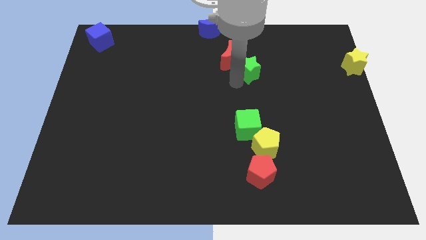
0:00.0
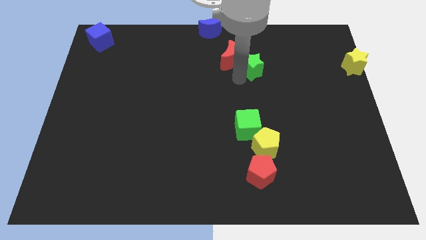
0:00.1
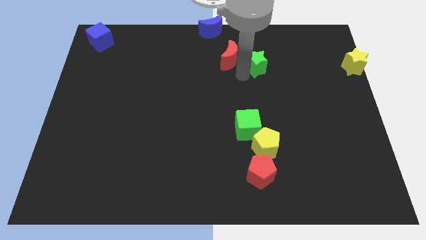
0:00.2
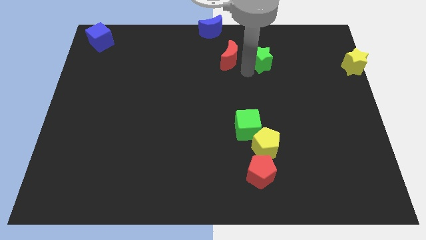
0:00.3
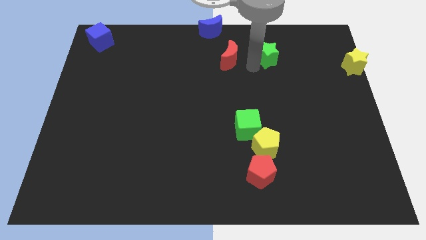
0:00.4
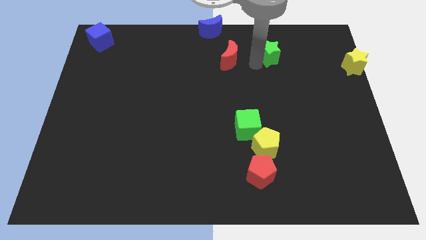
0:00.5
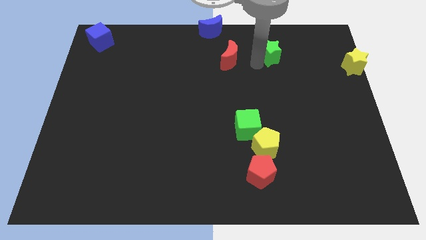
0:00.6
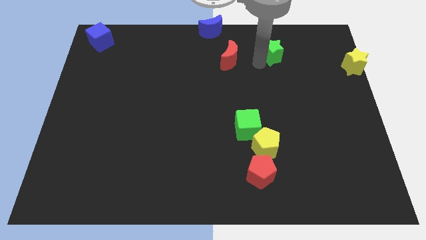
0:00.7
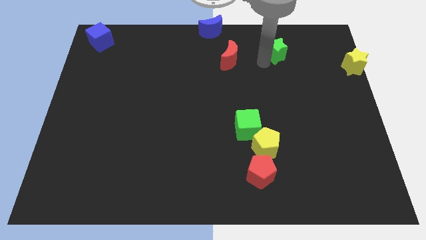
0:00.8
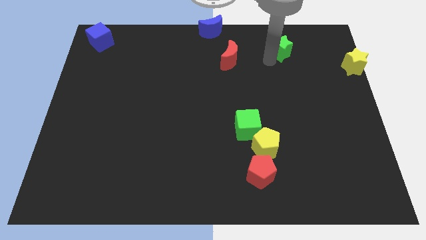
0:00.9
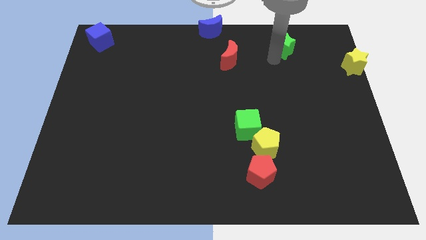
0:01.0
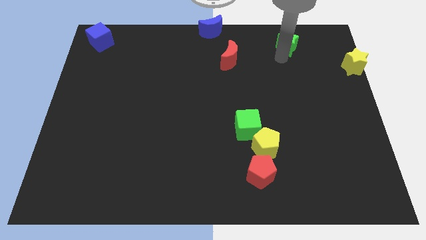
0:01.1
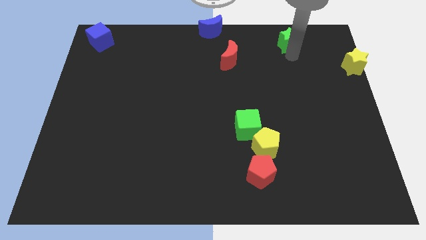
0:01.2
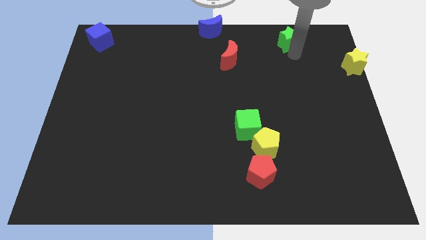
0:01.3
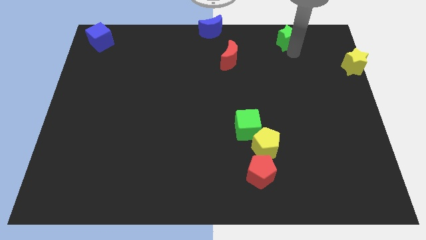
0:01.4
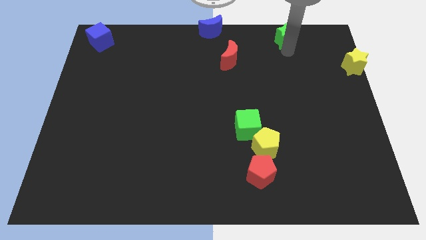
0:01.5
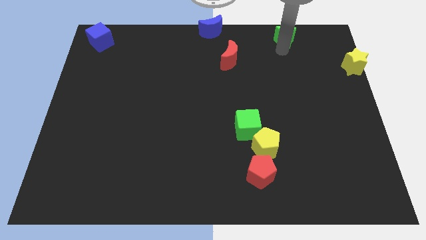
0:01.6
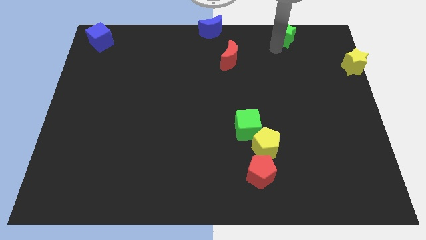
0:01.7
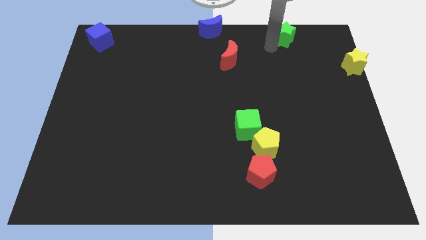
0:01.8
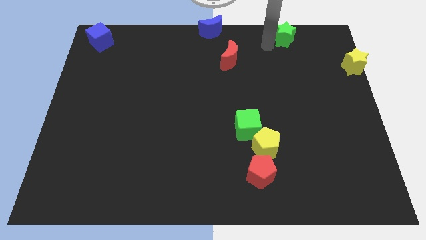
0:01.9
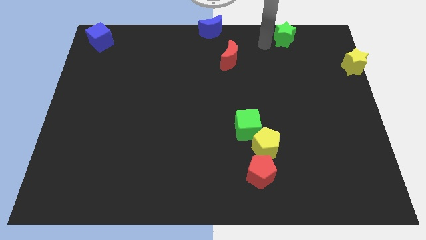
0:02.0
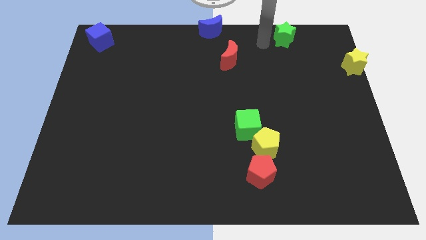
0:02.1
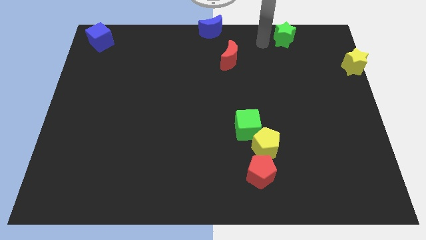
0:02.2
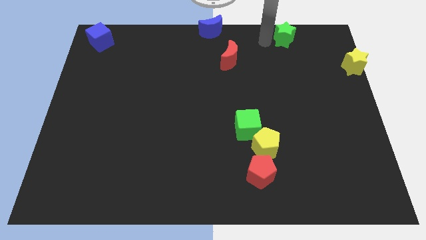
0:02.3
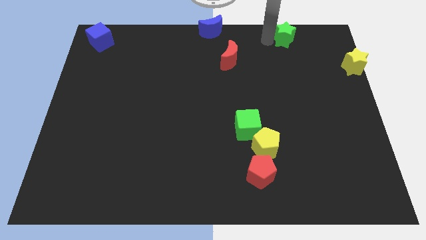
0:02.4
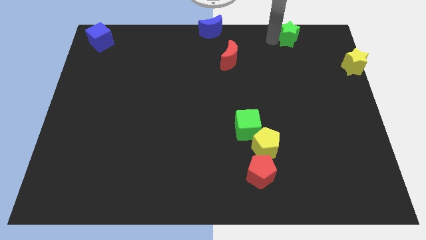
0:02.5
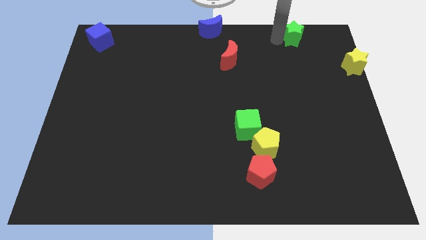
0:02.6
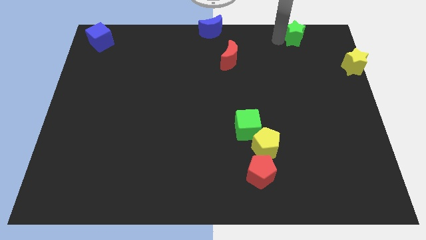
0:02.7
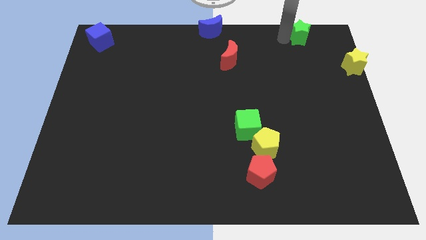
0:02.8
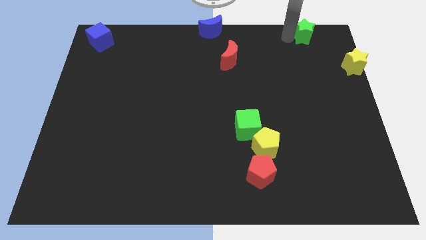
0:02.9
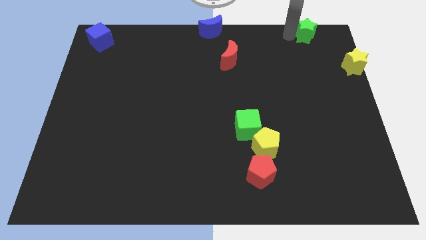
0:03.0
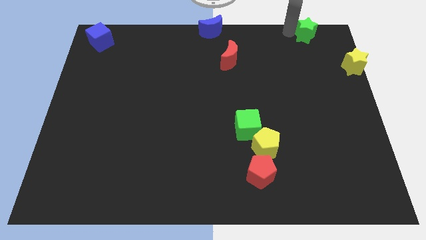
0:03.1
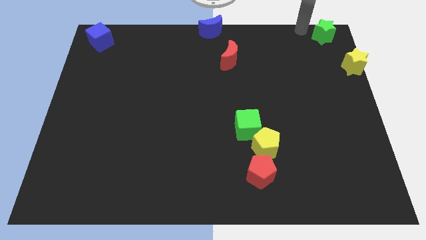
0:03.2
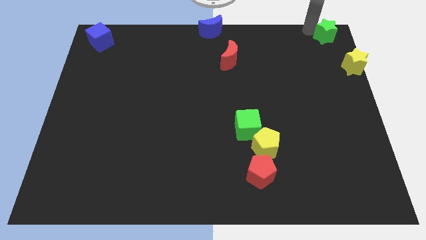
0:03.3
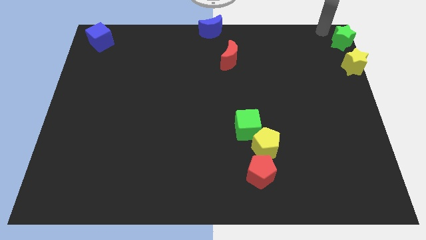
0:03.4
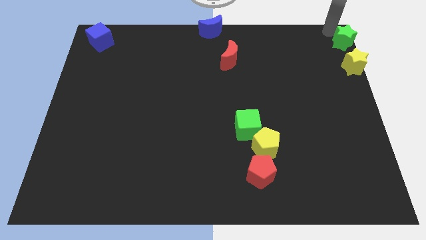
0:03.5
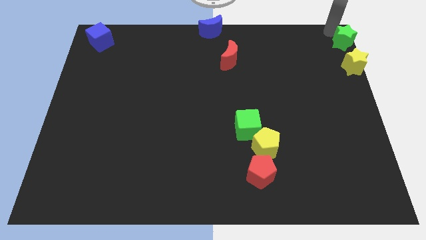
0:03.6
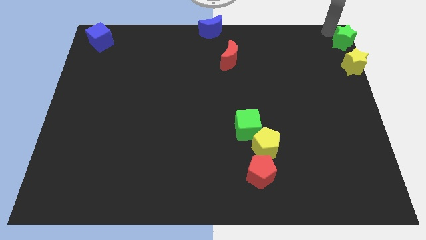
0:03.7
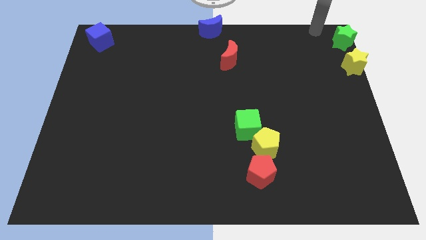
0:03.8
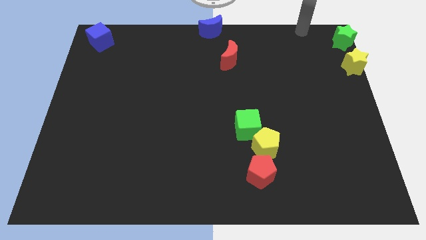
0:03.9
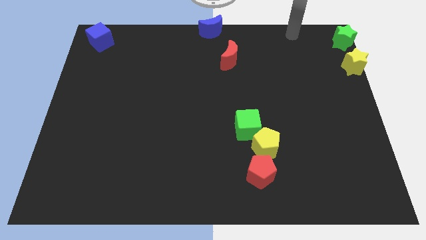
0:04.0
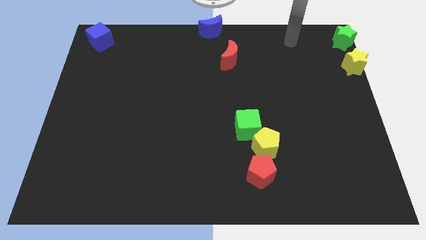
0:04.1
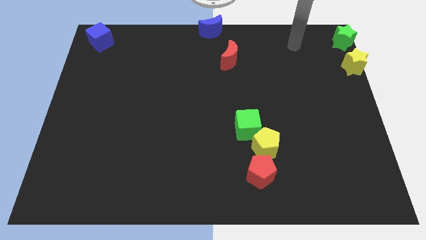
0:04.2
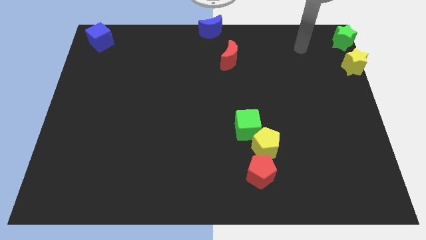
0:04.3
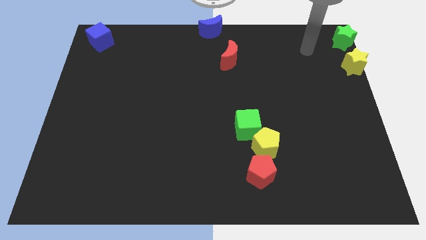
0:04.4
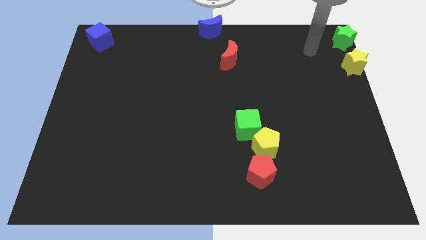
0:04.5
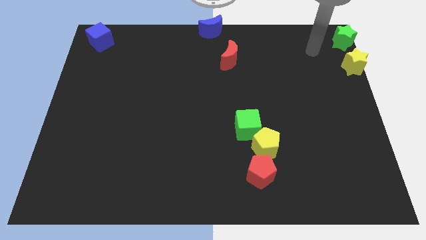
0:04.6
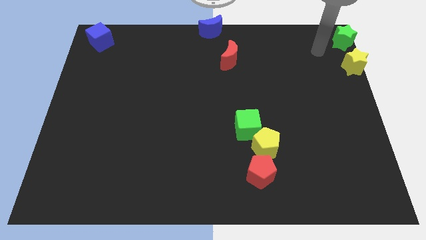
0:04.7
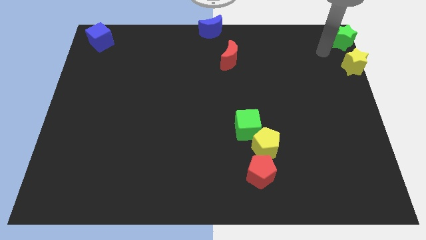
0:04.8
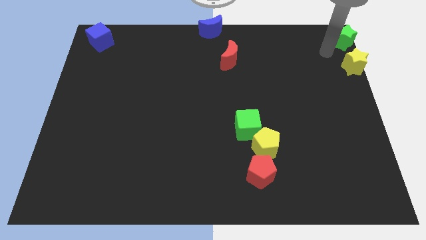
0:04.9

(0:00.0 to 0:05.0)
place green star above the yellow star

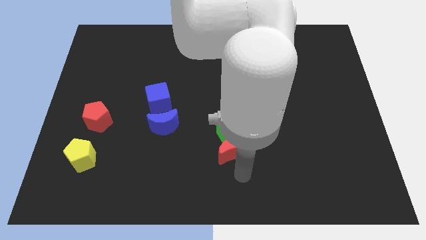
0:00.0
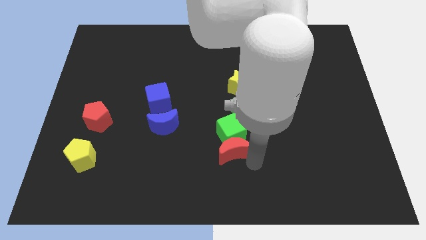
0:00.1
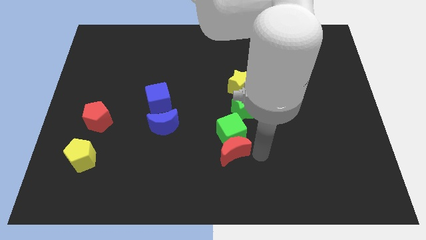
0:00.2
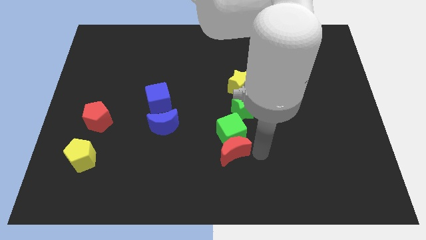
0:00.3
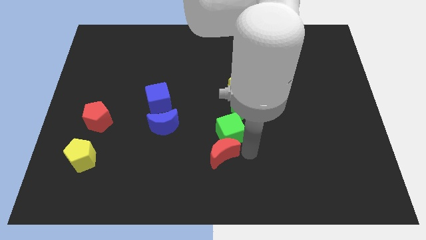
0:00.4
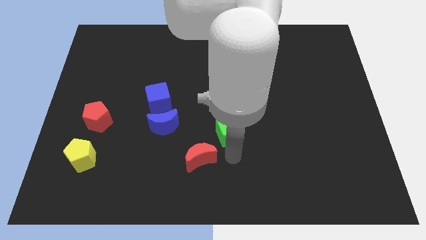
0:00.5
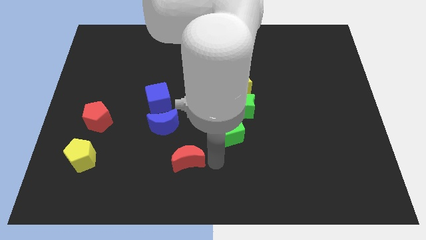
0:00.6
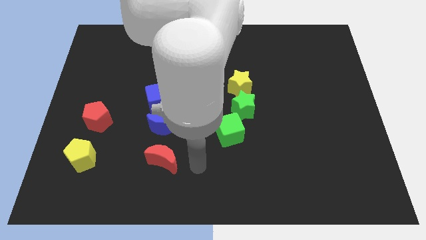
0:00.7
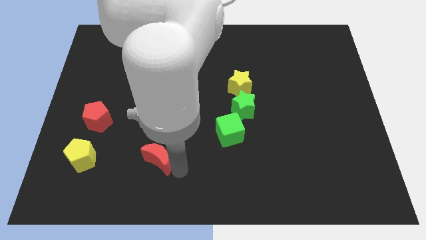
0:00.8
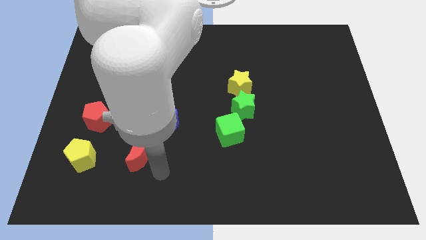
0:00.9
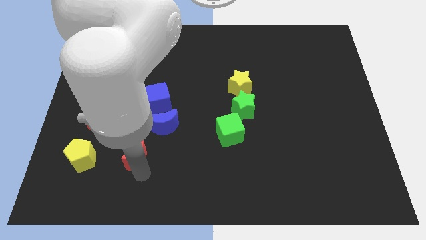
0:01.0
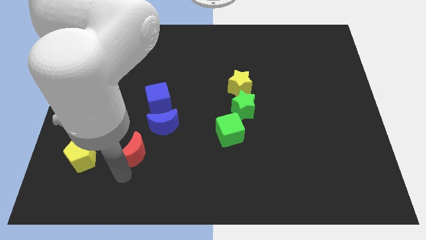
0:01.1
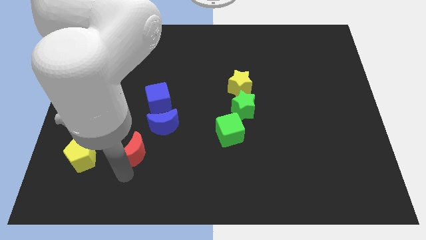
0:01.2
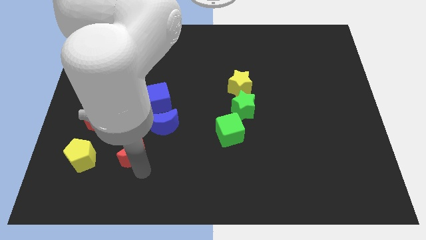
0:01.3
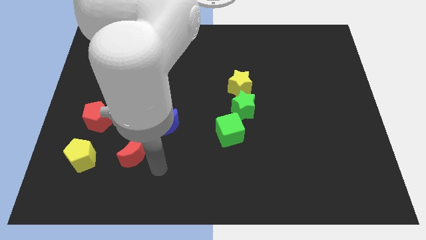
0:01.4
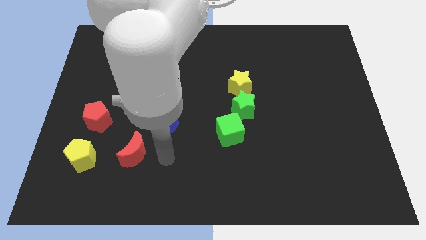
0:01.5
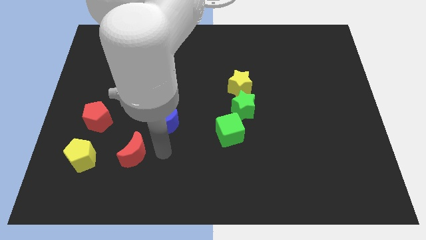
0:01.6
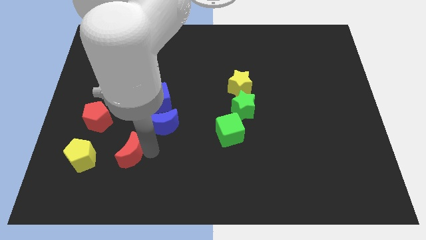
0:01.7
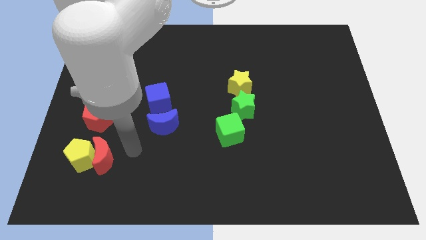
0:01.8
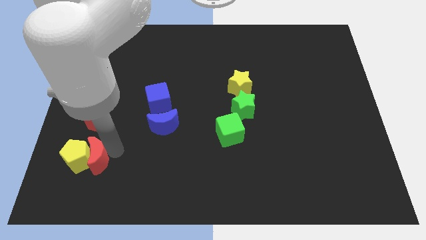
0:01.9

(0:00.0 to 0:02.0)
move the red crescent into the yellow pentagon

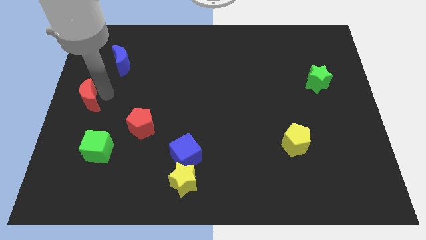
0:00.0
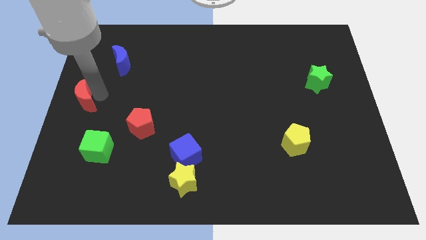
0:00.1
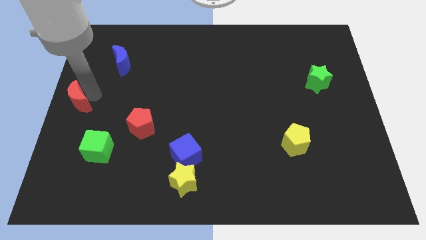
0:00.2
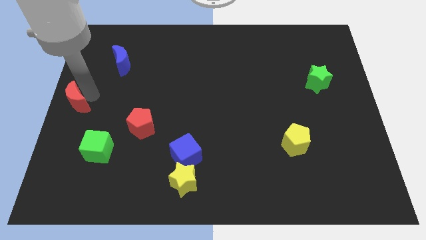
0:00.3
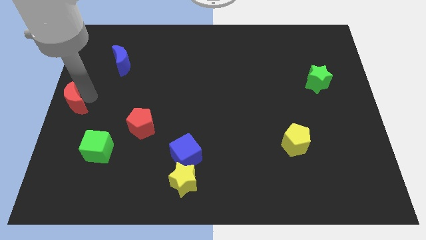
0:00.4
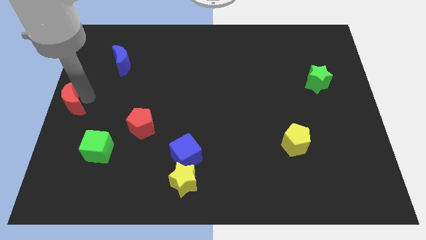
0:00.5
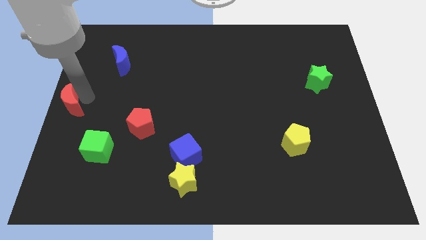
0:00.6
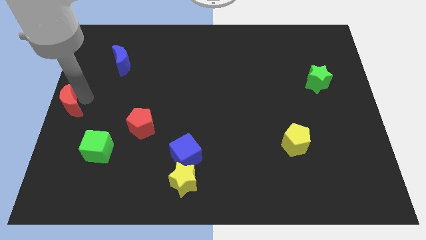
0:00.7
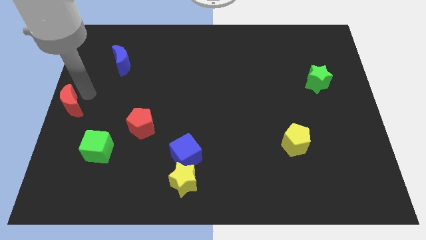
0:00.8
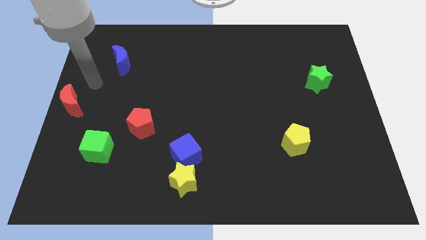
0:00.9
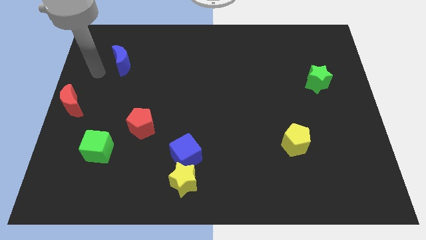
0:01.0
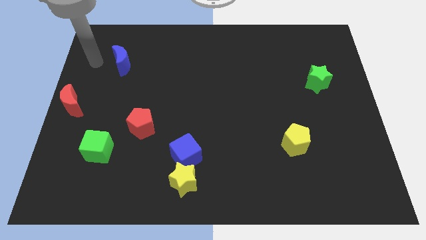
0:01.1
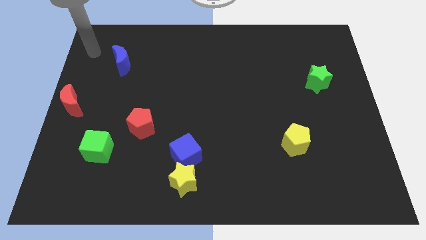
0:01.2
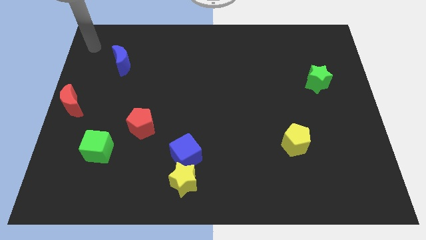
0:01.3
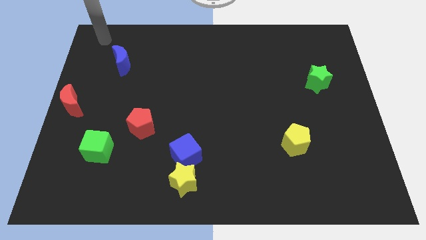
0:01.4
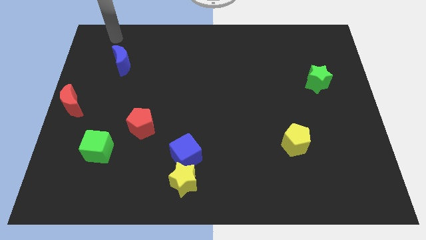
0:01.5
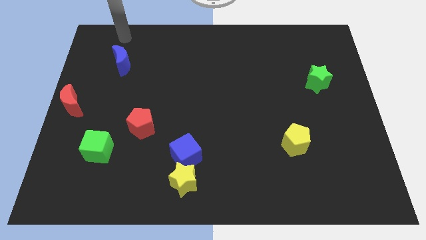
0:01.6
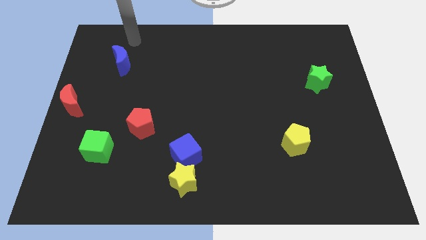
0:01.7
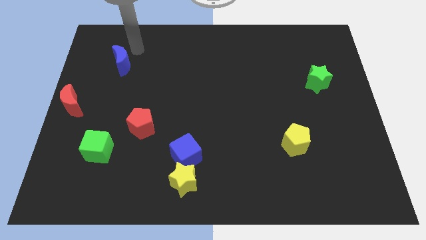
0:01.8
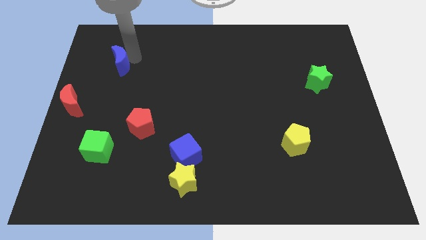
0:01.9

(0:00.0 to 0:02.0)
push the red crescent to the left center

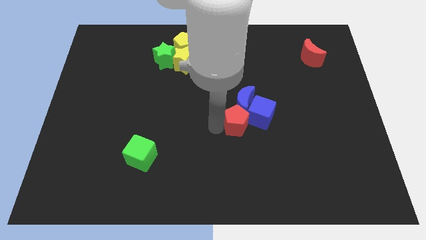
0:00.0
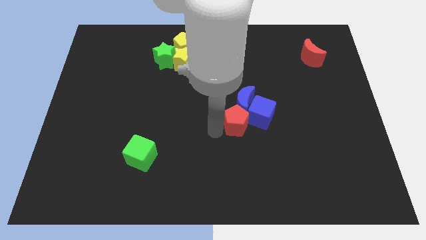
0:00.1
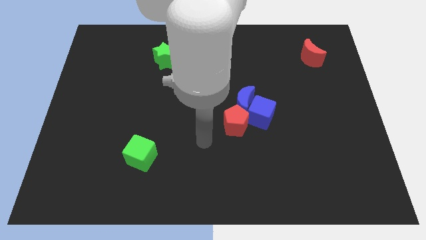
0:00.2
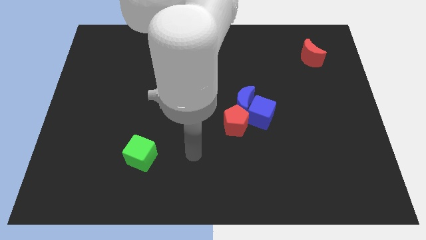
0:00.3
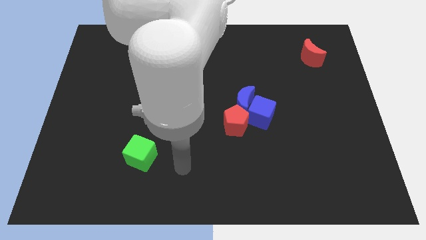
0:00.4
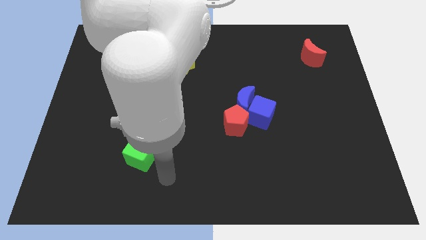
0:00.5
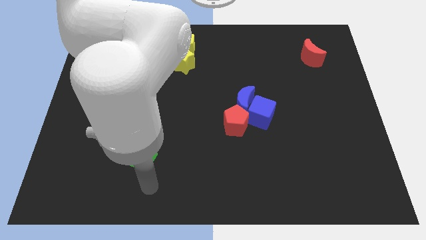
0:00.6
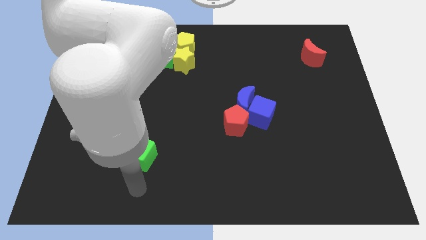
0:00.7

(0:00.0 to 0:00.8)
point your arm at the bottom of the green cube
